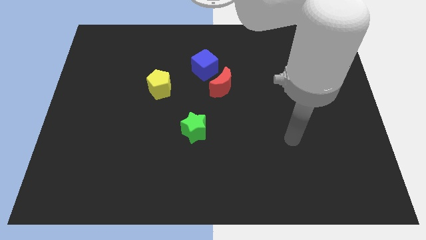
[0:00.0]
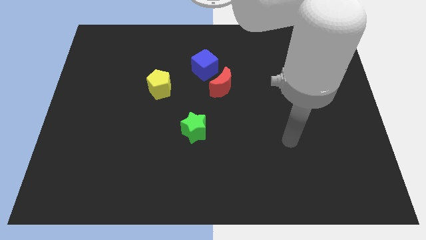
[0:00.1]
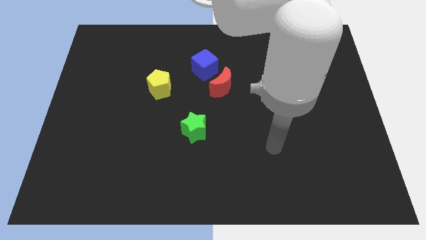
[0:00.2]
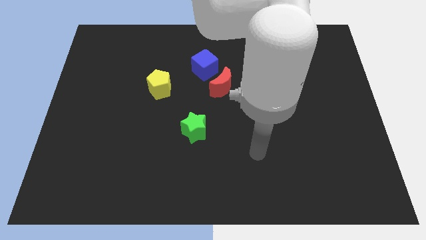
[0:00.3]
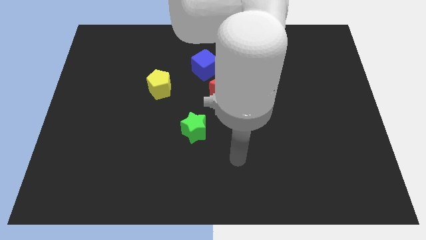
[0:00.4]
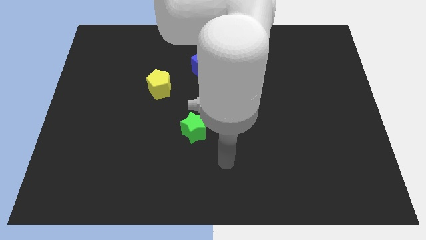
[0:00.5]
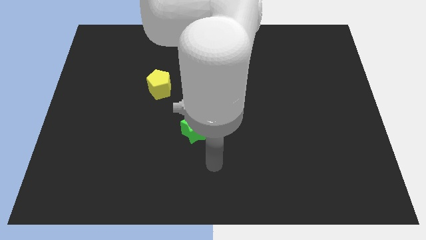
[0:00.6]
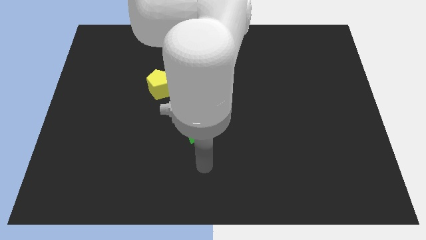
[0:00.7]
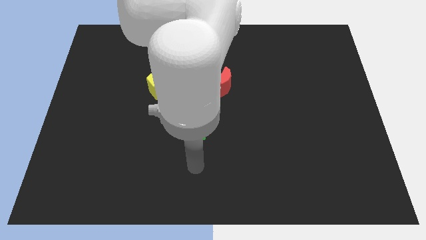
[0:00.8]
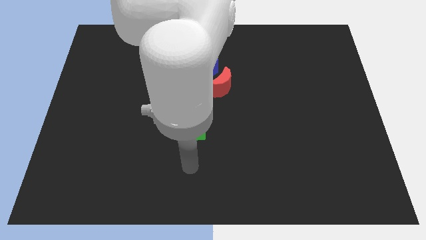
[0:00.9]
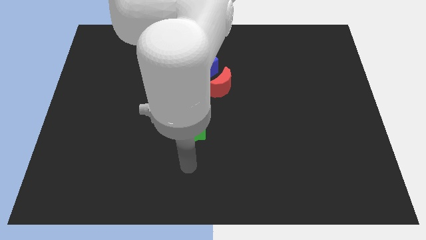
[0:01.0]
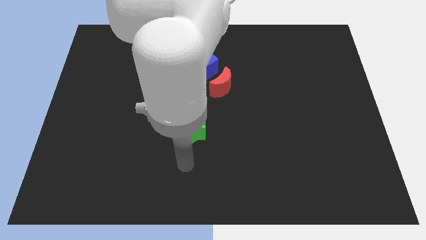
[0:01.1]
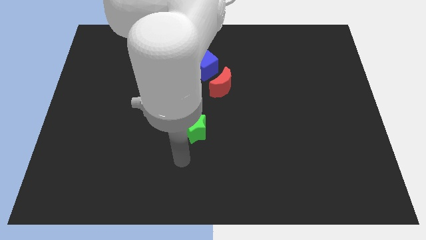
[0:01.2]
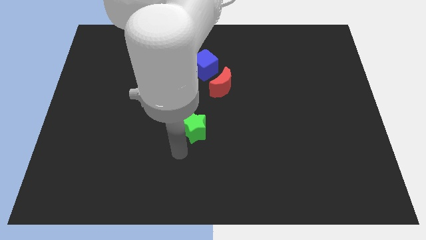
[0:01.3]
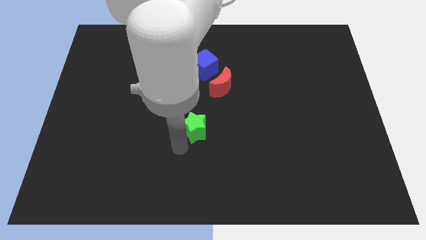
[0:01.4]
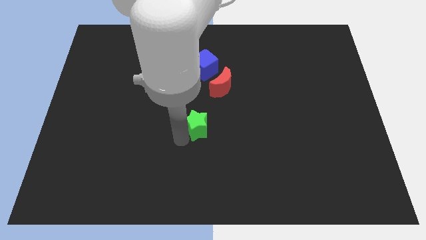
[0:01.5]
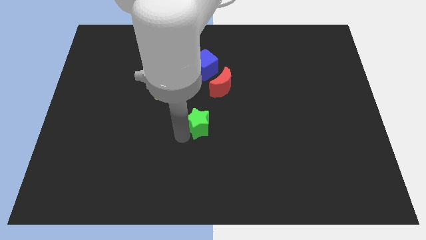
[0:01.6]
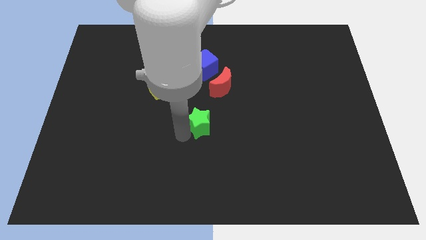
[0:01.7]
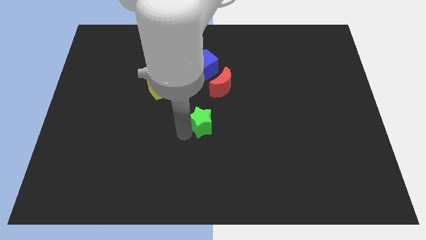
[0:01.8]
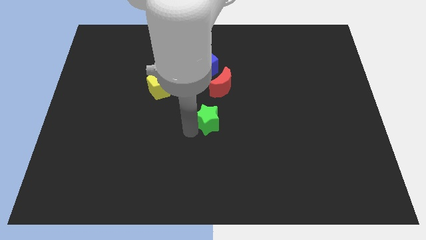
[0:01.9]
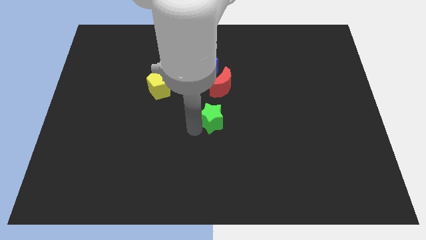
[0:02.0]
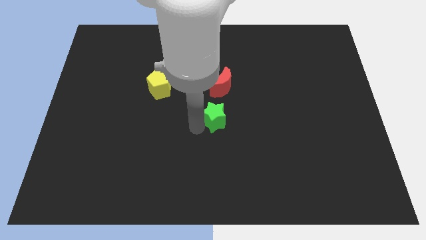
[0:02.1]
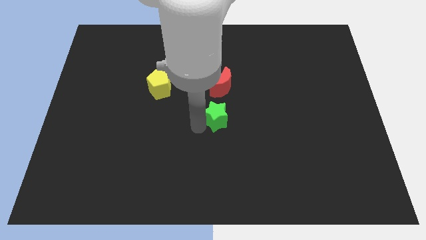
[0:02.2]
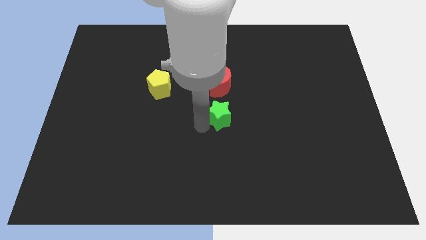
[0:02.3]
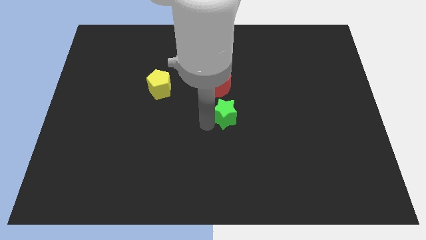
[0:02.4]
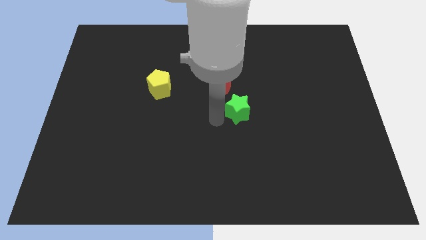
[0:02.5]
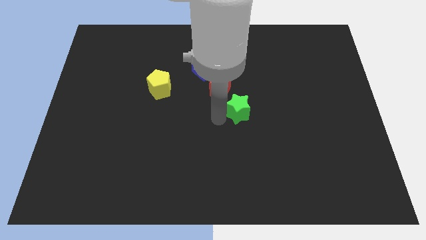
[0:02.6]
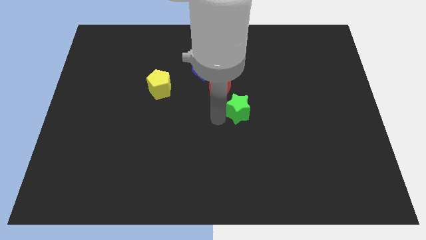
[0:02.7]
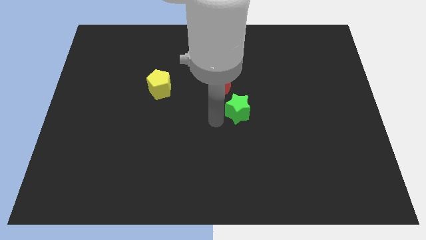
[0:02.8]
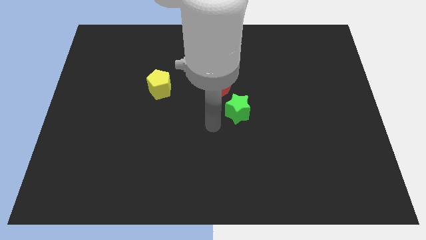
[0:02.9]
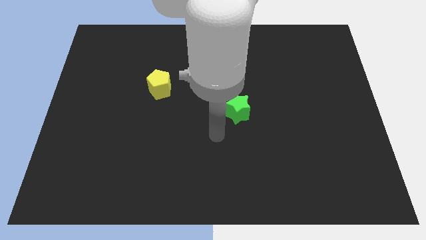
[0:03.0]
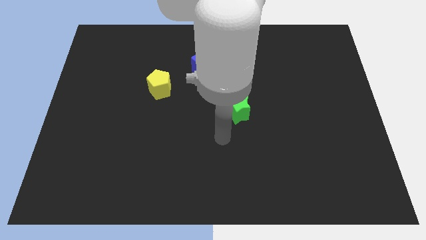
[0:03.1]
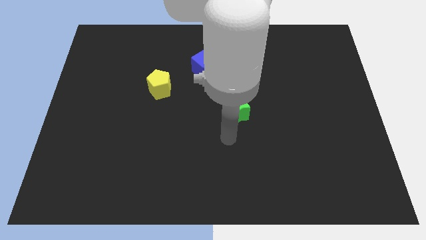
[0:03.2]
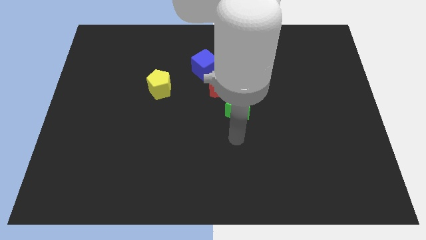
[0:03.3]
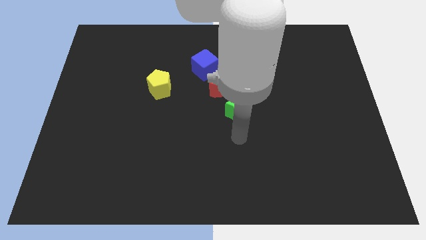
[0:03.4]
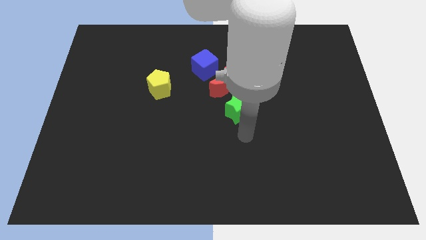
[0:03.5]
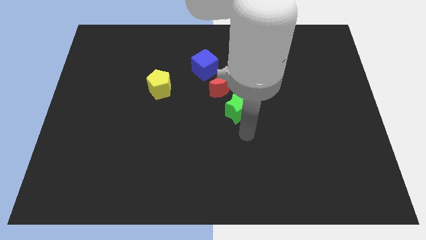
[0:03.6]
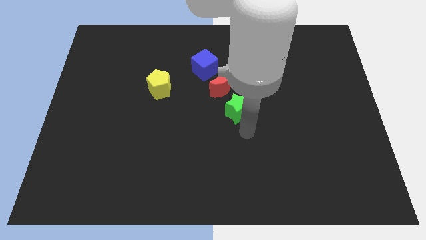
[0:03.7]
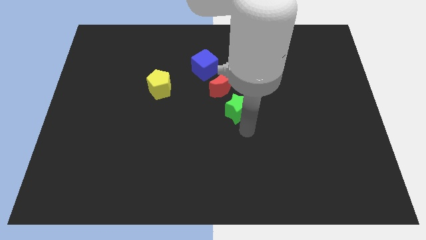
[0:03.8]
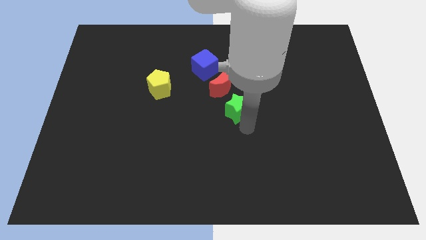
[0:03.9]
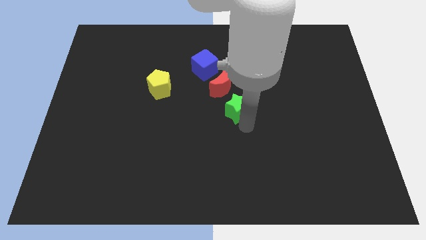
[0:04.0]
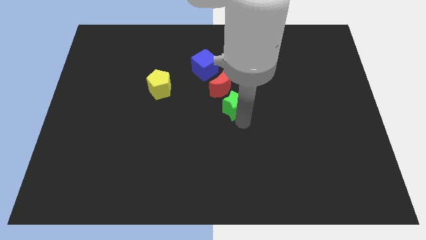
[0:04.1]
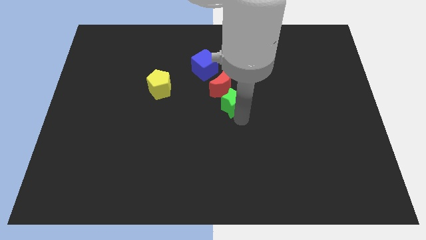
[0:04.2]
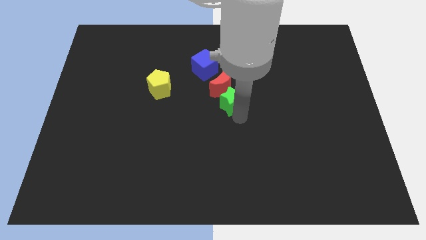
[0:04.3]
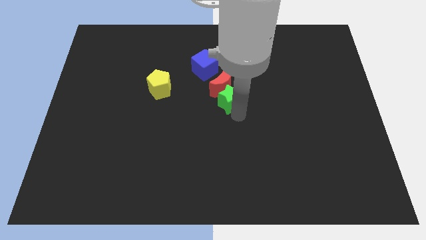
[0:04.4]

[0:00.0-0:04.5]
put the green block next to the moon

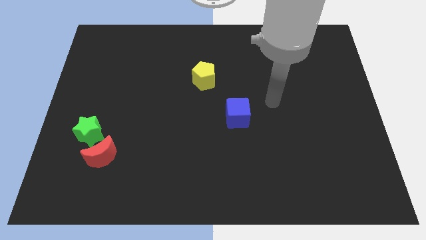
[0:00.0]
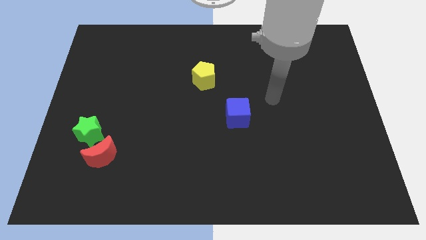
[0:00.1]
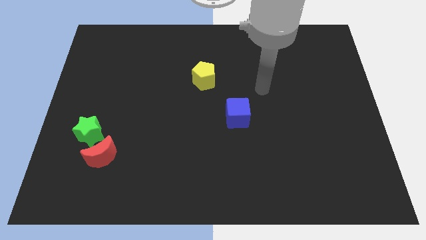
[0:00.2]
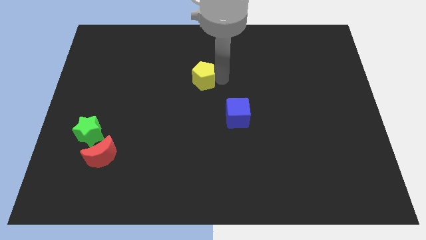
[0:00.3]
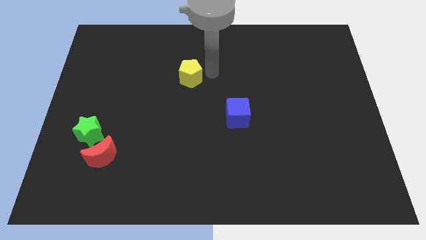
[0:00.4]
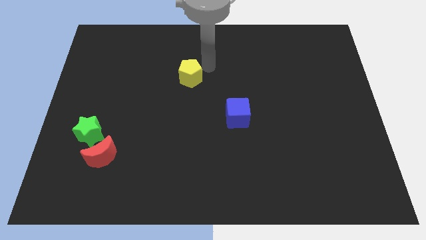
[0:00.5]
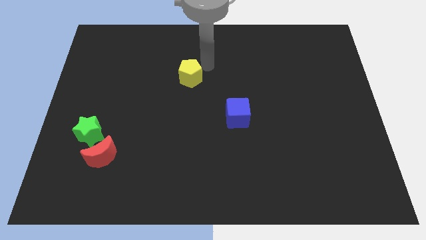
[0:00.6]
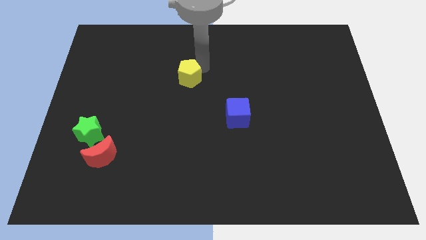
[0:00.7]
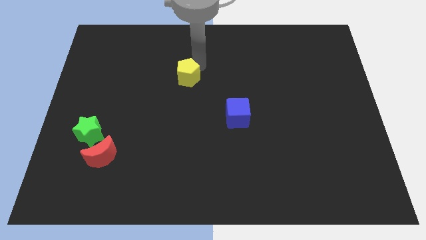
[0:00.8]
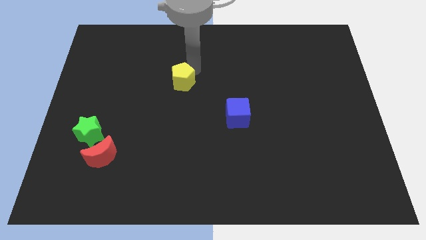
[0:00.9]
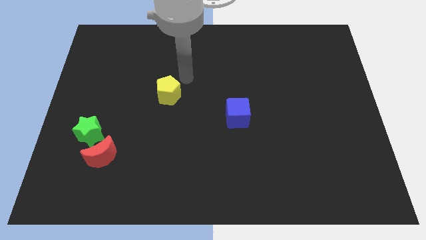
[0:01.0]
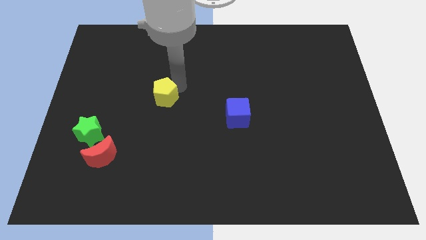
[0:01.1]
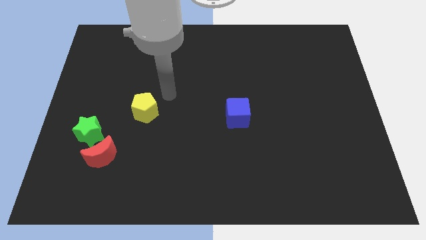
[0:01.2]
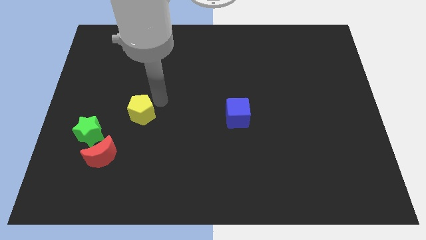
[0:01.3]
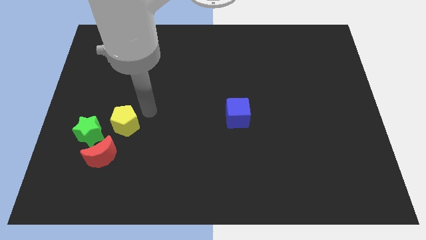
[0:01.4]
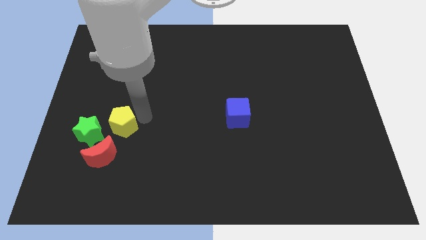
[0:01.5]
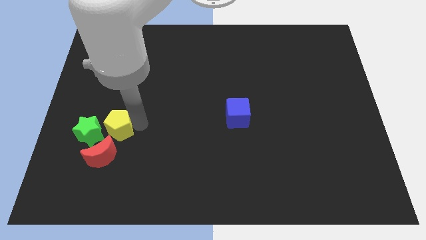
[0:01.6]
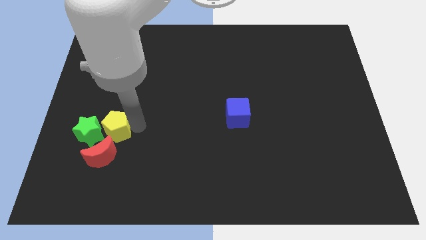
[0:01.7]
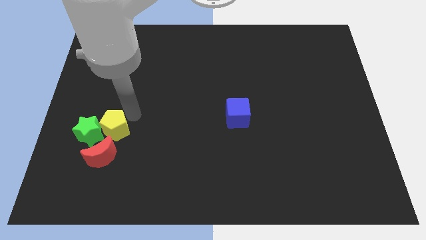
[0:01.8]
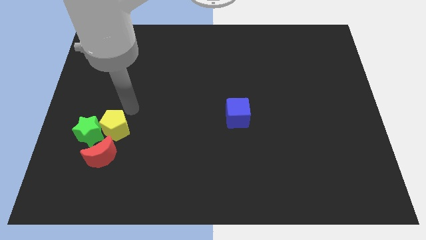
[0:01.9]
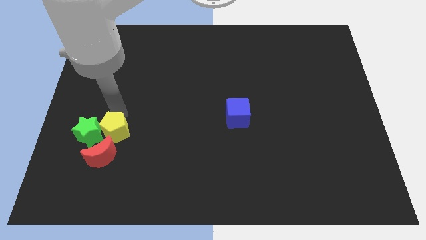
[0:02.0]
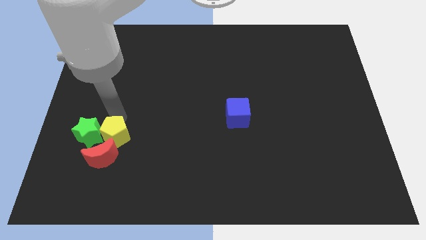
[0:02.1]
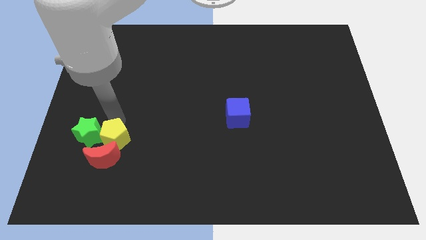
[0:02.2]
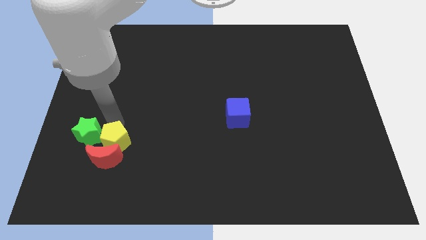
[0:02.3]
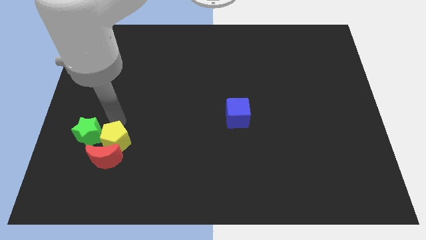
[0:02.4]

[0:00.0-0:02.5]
put the yellow pentagon to the moon

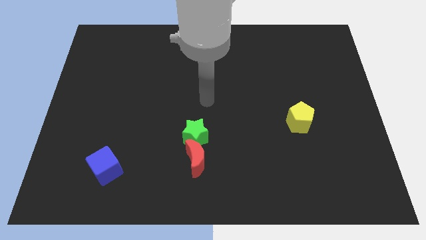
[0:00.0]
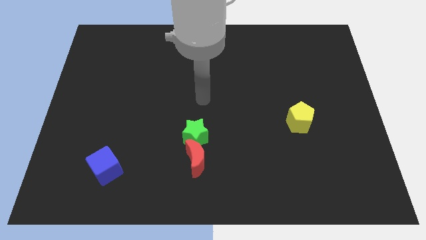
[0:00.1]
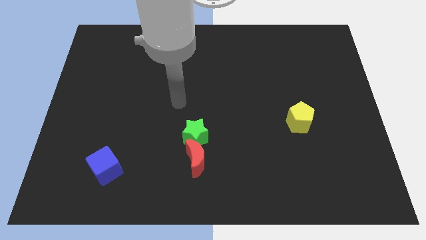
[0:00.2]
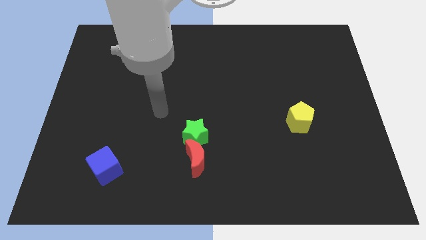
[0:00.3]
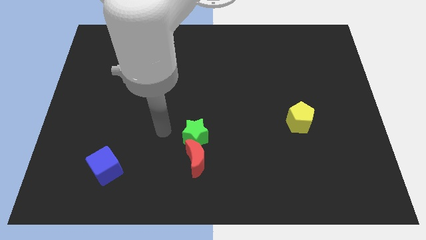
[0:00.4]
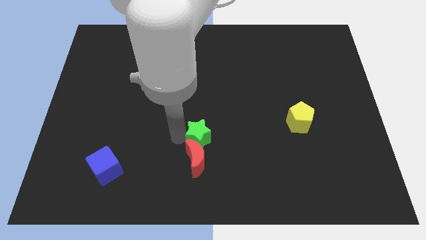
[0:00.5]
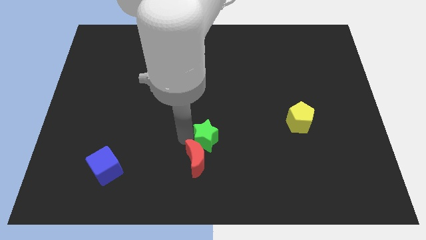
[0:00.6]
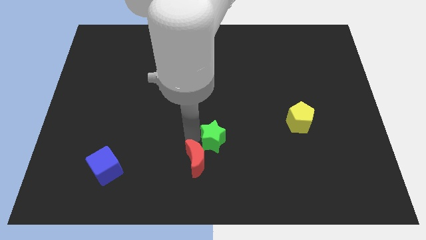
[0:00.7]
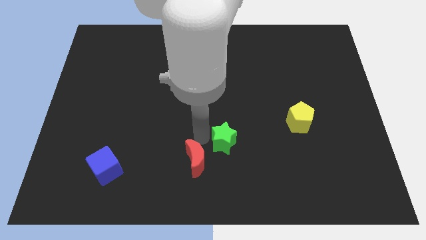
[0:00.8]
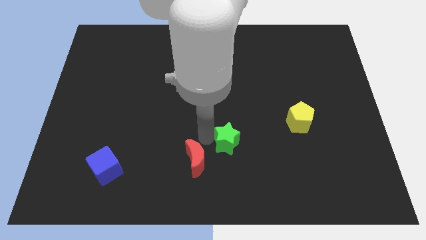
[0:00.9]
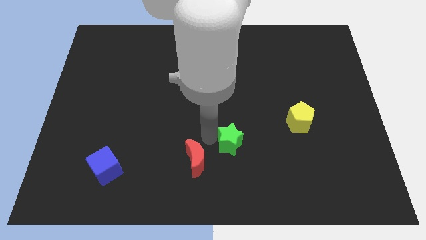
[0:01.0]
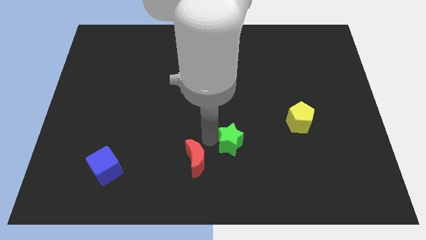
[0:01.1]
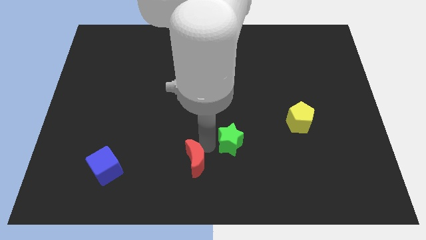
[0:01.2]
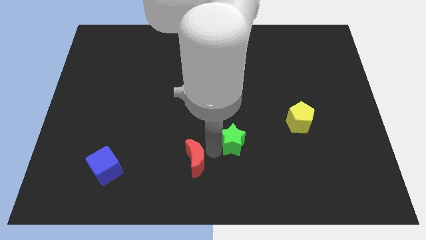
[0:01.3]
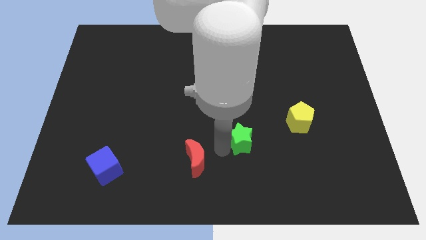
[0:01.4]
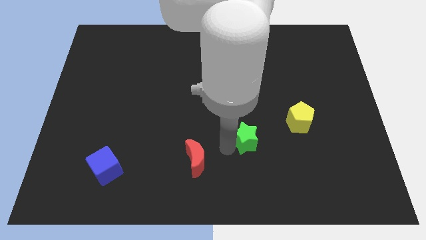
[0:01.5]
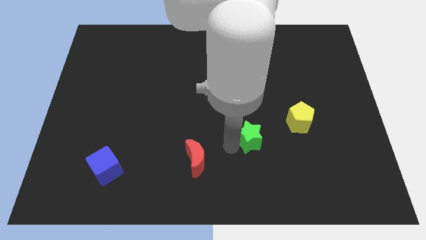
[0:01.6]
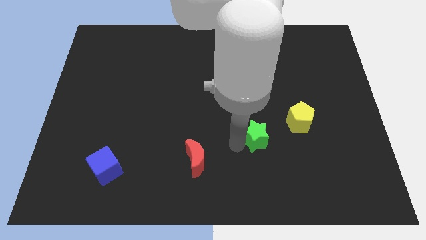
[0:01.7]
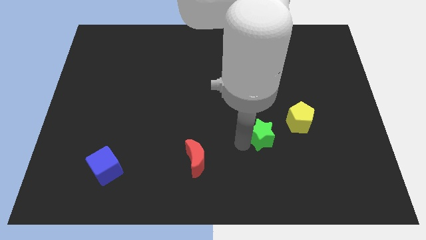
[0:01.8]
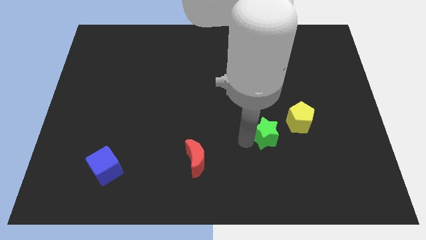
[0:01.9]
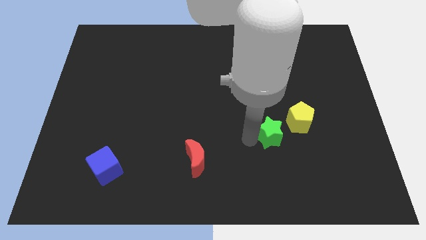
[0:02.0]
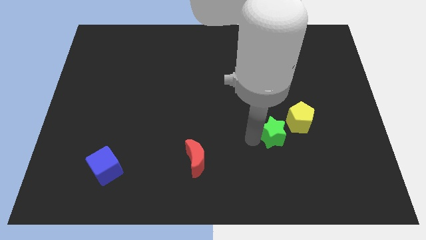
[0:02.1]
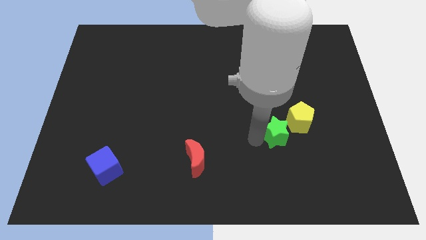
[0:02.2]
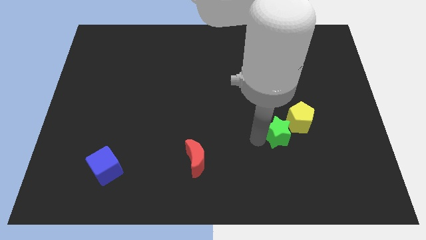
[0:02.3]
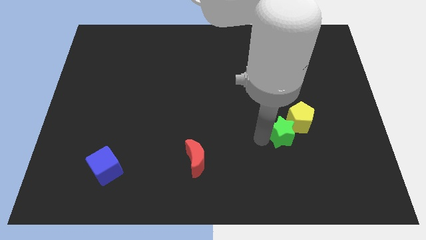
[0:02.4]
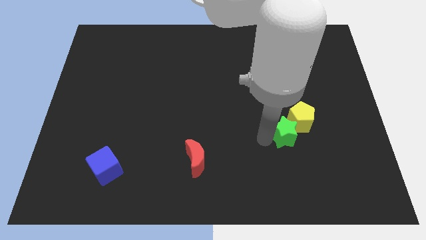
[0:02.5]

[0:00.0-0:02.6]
slide the green star towards the yellow pentagon
